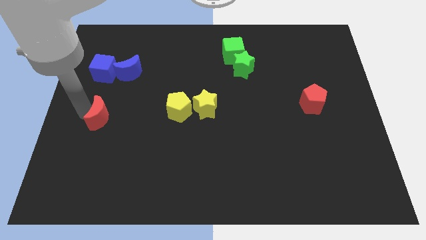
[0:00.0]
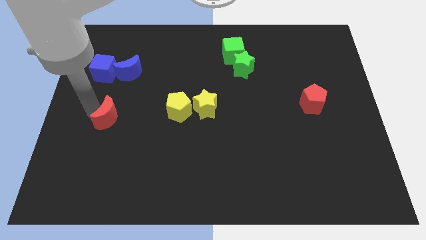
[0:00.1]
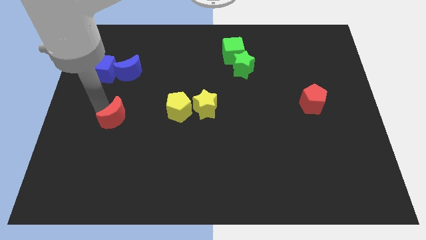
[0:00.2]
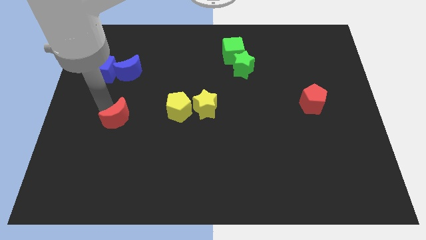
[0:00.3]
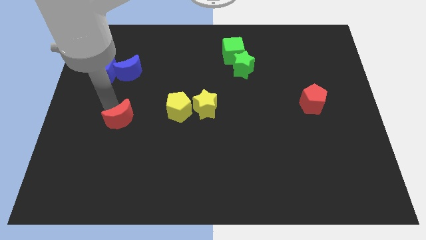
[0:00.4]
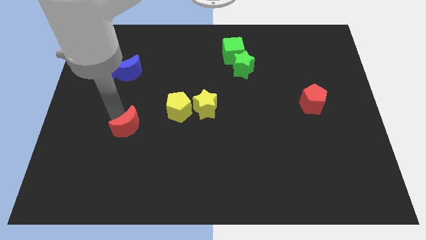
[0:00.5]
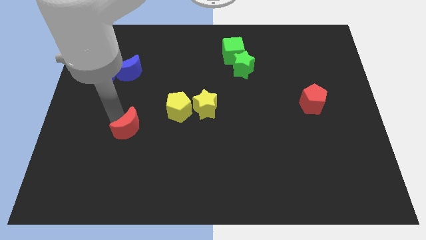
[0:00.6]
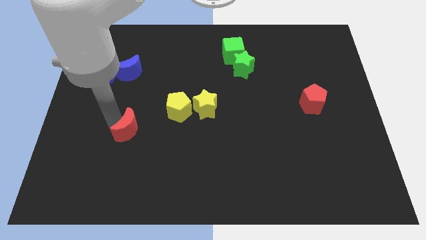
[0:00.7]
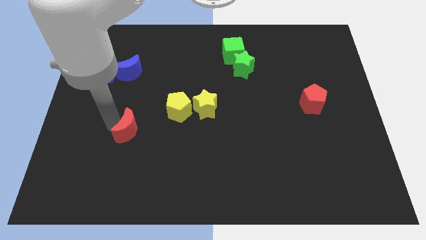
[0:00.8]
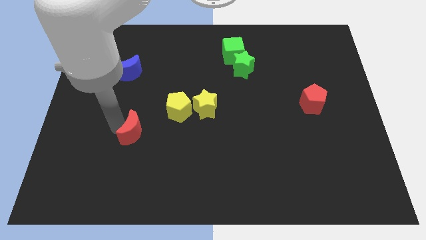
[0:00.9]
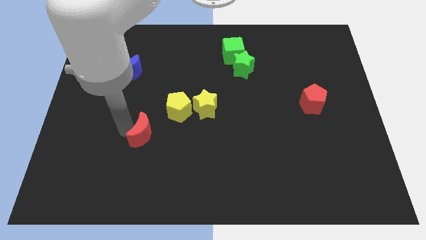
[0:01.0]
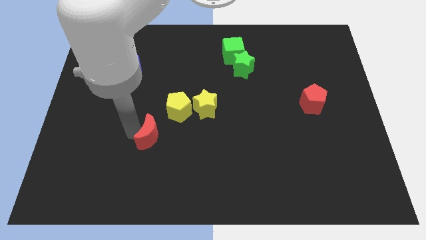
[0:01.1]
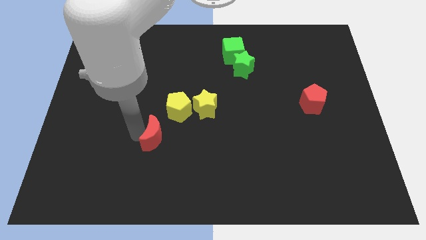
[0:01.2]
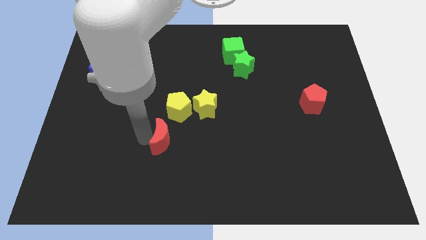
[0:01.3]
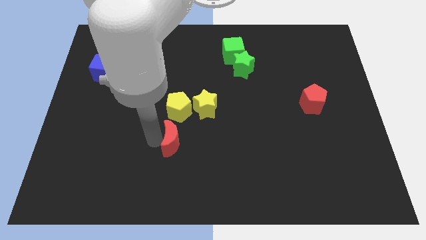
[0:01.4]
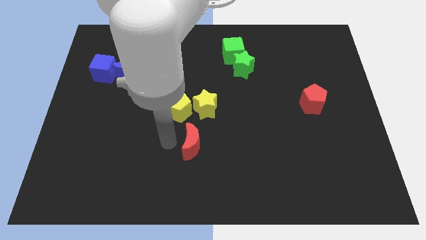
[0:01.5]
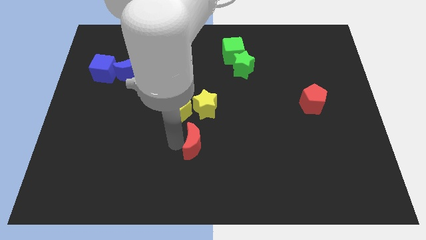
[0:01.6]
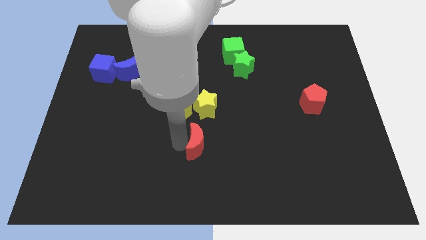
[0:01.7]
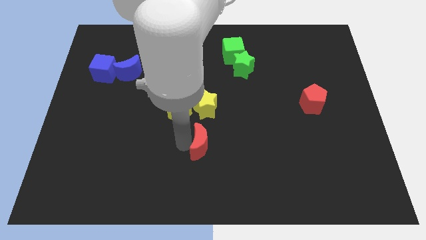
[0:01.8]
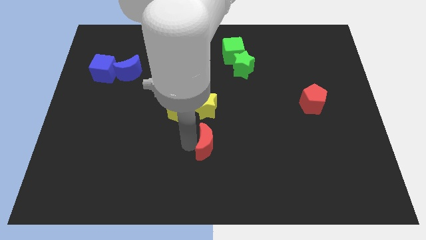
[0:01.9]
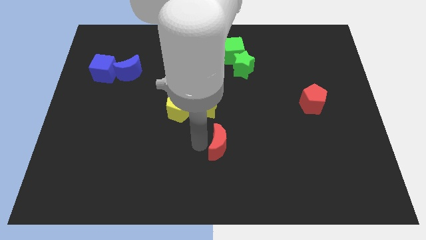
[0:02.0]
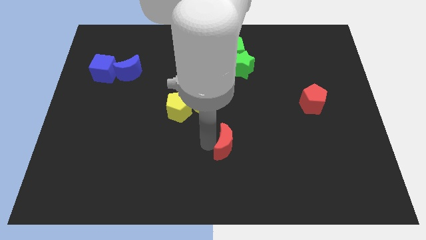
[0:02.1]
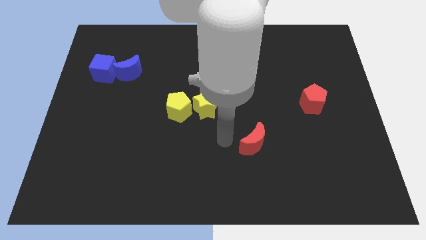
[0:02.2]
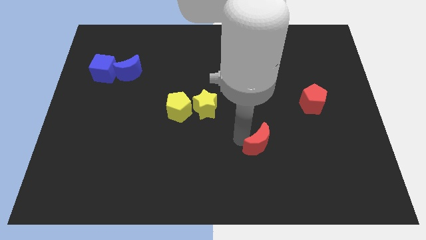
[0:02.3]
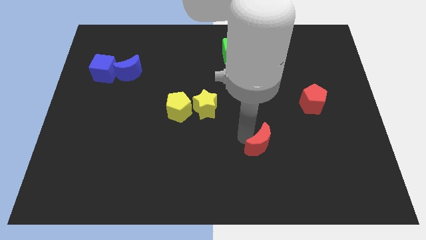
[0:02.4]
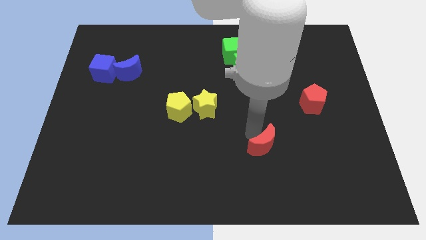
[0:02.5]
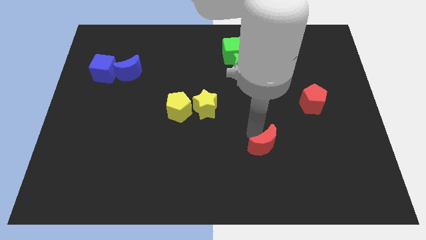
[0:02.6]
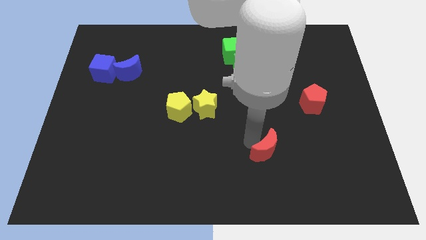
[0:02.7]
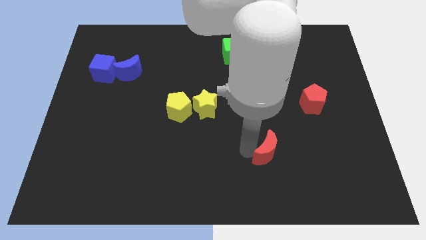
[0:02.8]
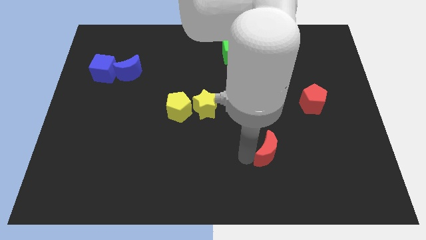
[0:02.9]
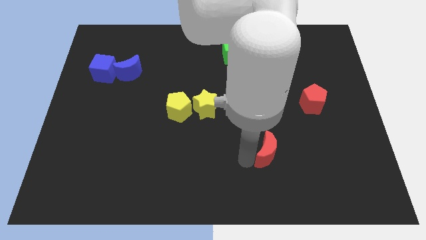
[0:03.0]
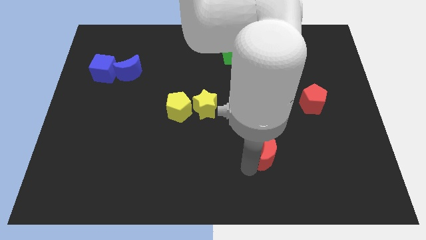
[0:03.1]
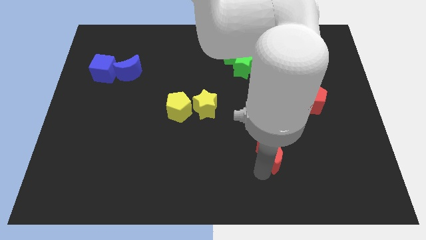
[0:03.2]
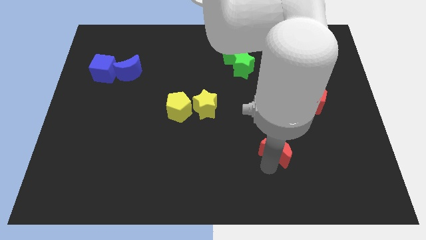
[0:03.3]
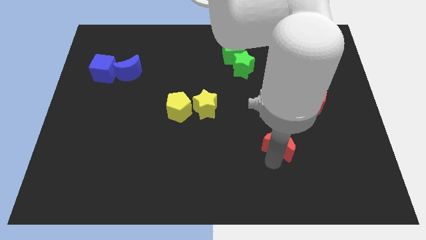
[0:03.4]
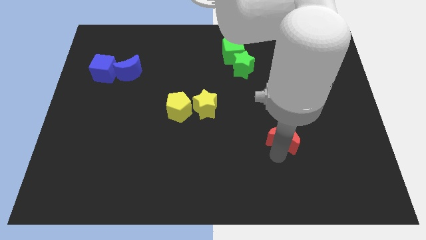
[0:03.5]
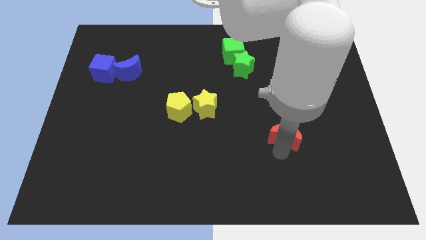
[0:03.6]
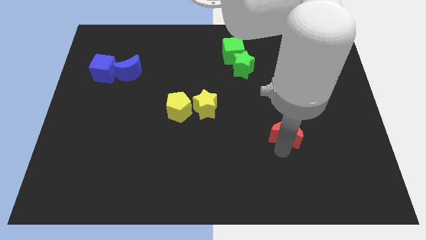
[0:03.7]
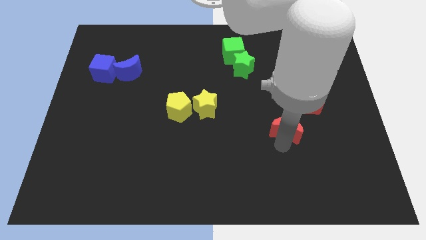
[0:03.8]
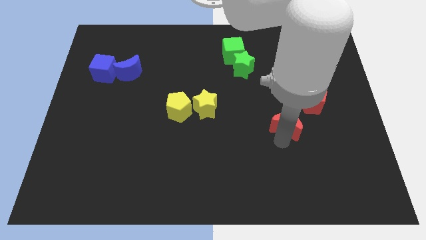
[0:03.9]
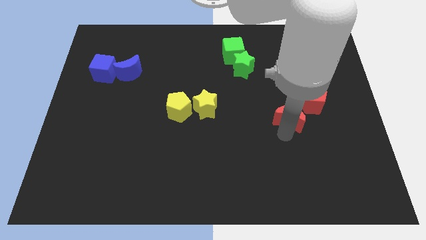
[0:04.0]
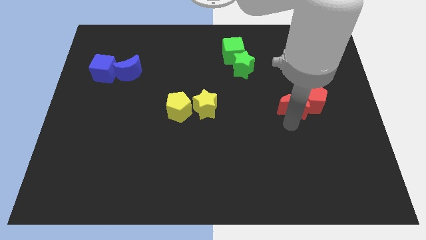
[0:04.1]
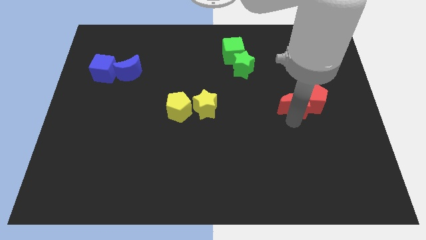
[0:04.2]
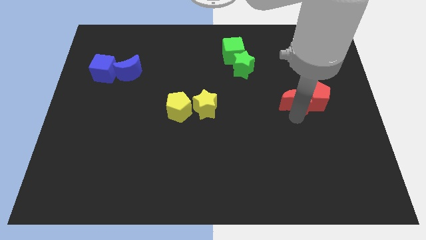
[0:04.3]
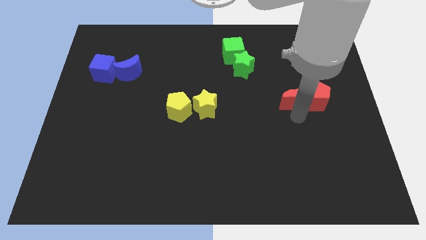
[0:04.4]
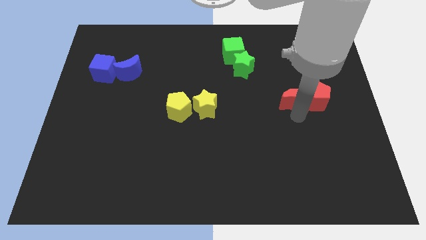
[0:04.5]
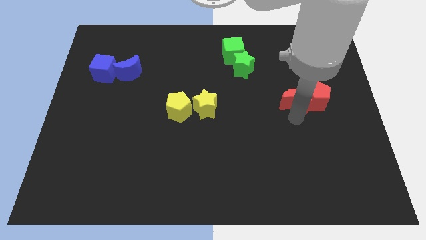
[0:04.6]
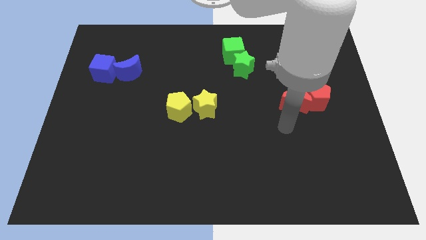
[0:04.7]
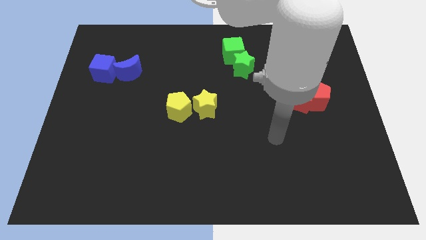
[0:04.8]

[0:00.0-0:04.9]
push the red crescent into the red pentagon

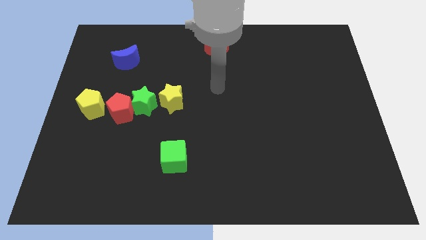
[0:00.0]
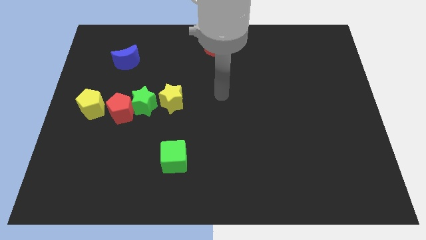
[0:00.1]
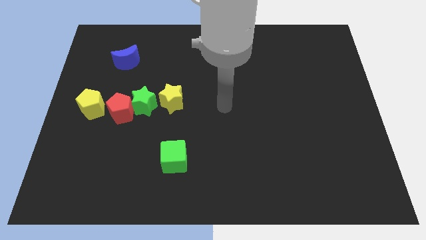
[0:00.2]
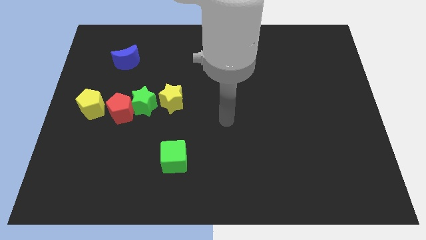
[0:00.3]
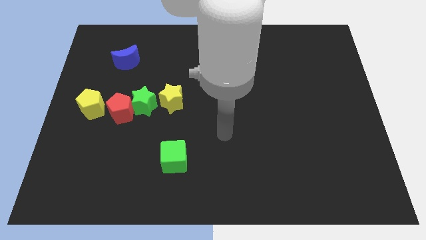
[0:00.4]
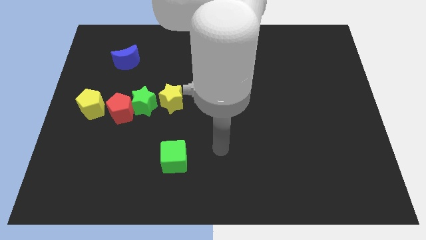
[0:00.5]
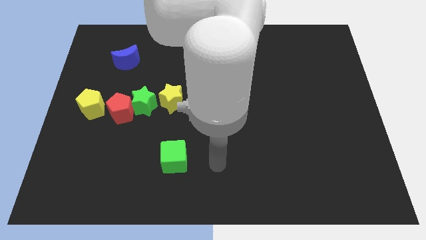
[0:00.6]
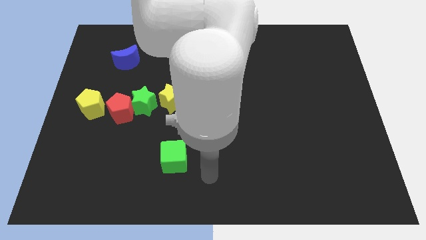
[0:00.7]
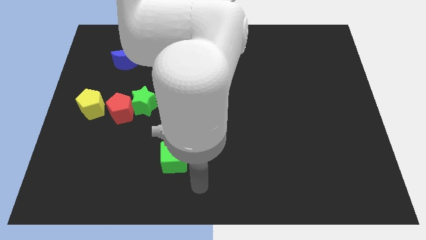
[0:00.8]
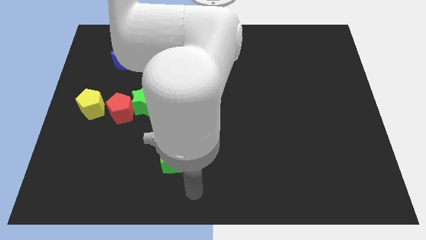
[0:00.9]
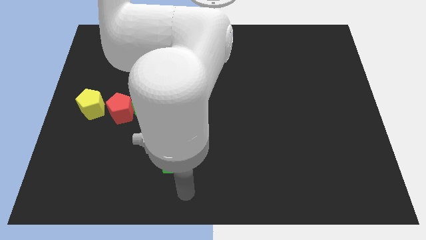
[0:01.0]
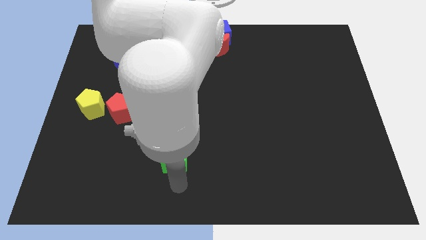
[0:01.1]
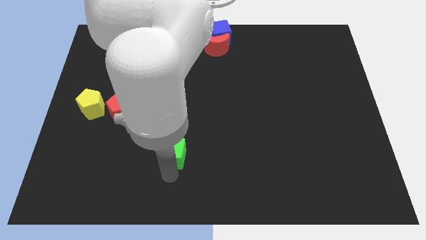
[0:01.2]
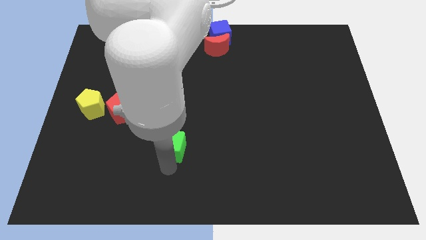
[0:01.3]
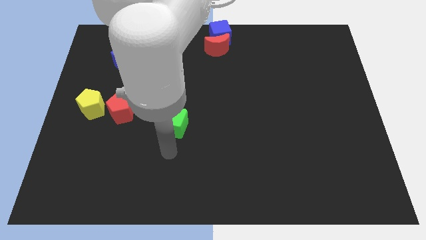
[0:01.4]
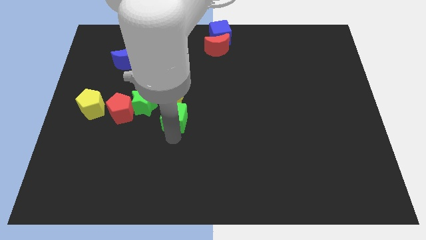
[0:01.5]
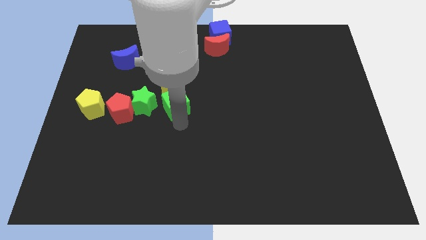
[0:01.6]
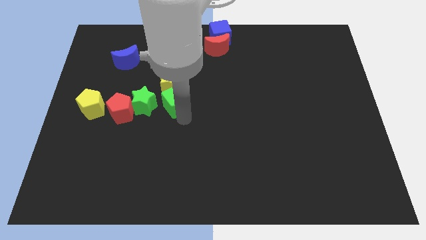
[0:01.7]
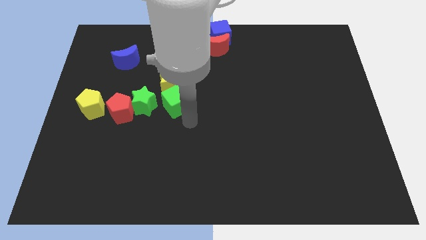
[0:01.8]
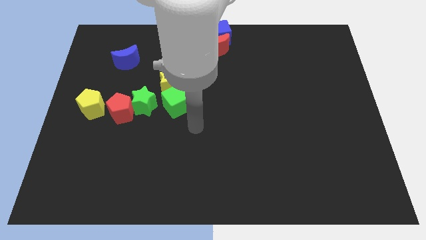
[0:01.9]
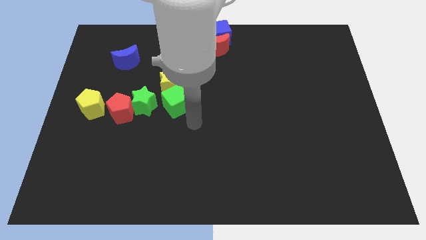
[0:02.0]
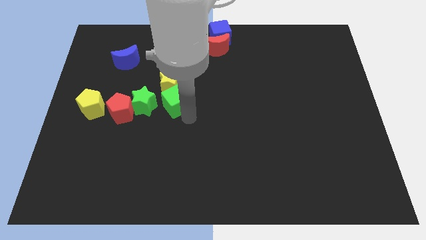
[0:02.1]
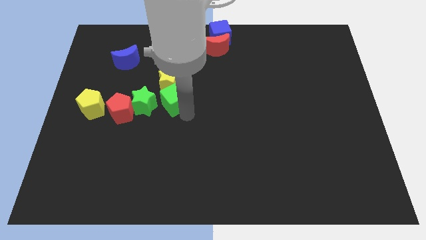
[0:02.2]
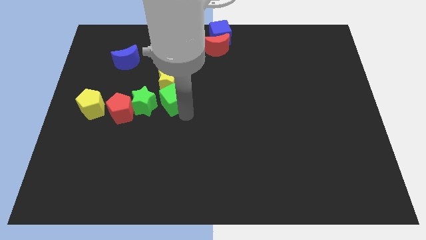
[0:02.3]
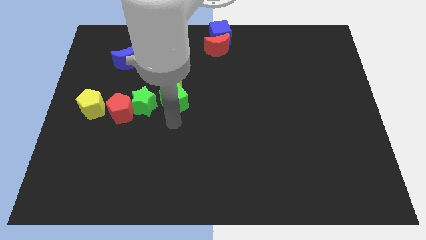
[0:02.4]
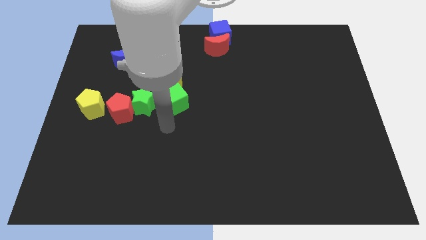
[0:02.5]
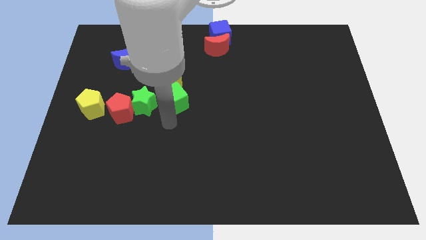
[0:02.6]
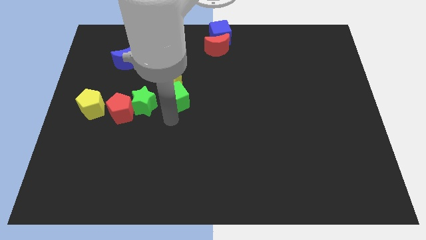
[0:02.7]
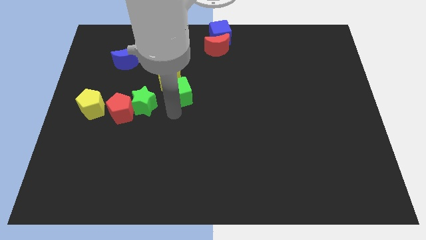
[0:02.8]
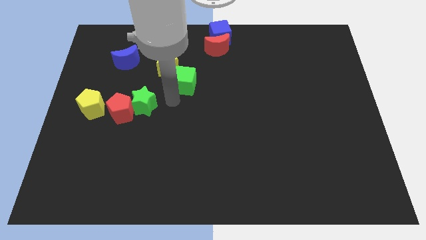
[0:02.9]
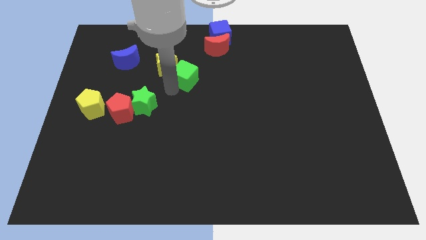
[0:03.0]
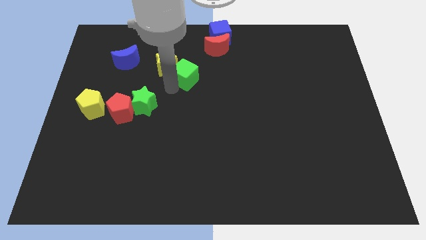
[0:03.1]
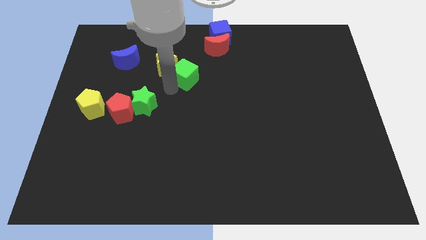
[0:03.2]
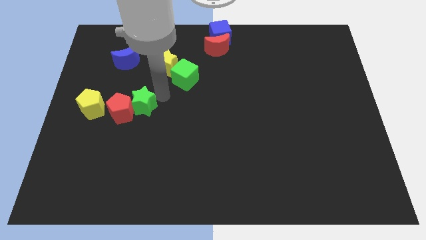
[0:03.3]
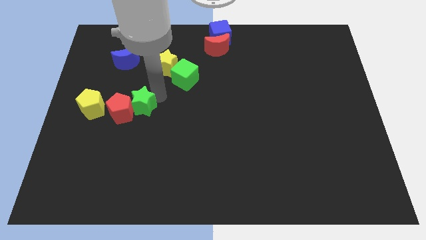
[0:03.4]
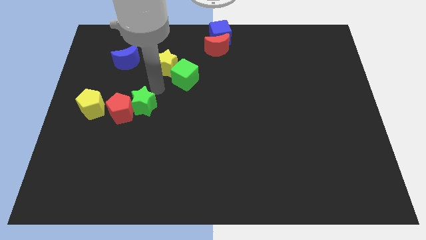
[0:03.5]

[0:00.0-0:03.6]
move green block intlo the yellow star

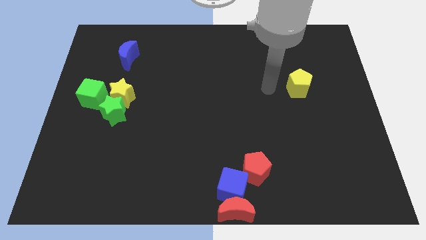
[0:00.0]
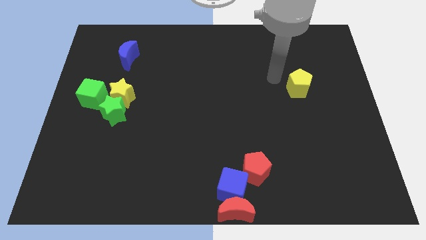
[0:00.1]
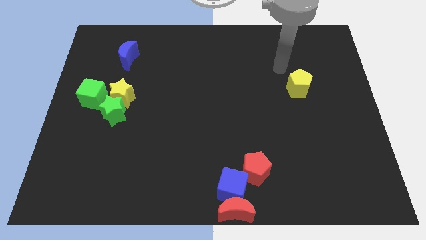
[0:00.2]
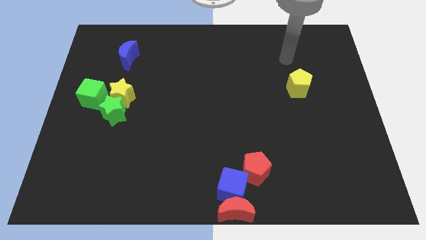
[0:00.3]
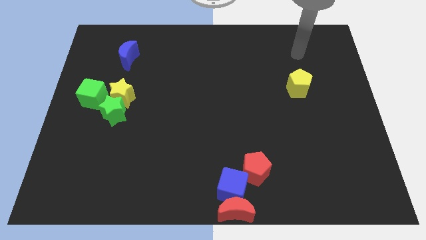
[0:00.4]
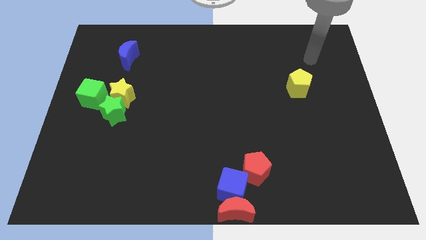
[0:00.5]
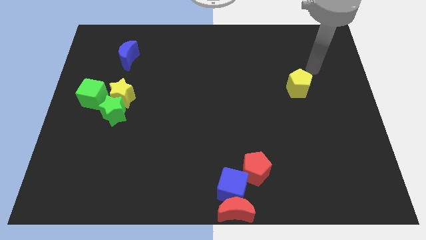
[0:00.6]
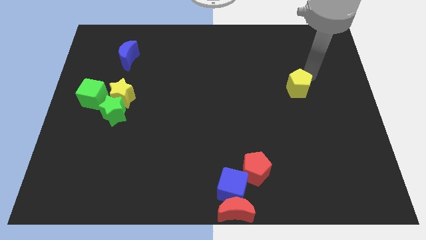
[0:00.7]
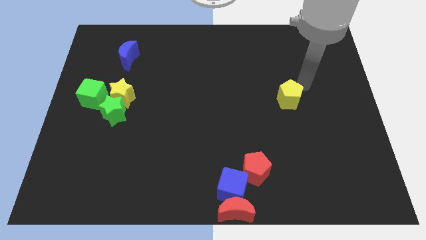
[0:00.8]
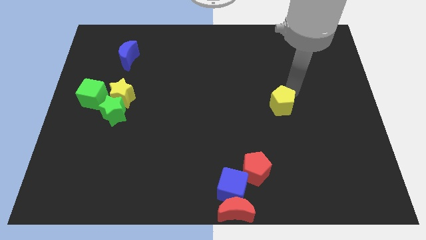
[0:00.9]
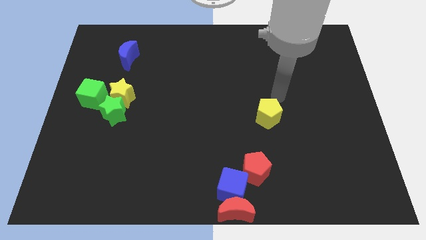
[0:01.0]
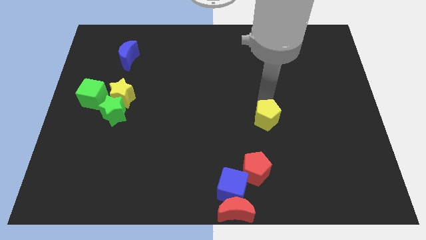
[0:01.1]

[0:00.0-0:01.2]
push the yellow pentagon slightly to the bottom of the board
